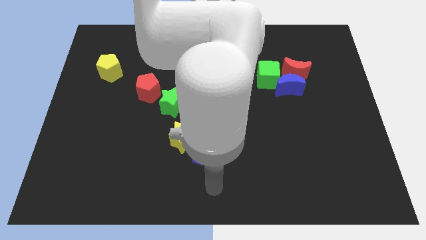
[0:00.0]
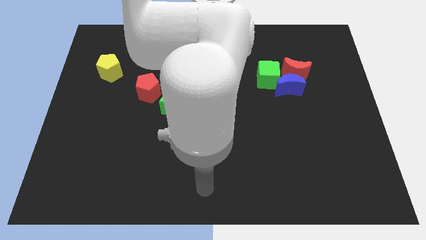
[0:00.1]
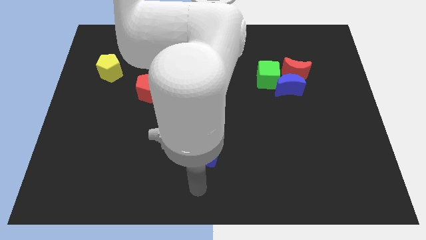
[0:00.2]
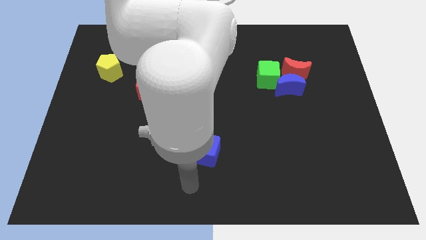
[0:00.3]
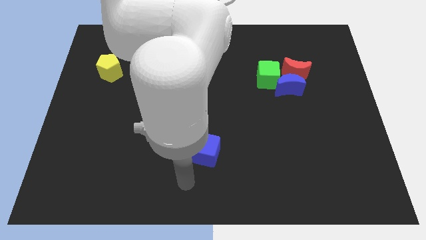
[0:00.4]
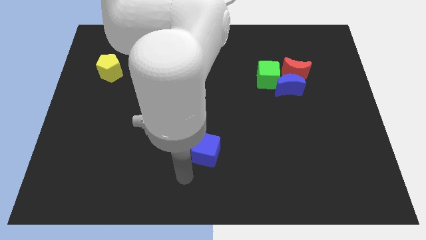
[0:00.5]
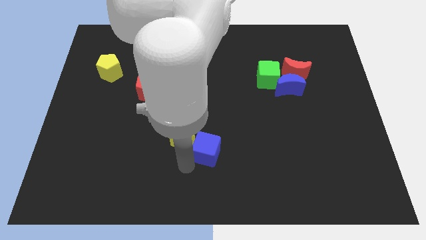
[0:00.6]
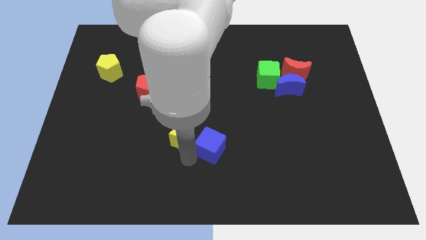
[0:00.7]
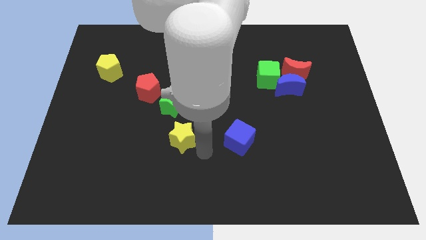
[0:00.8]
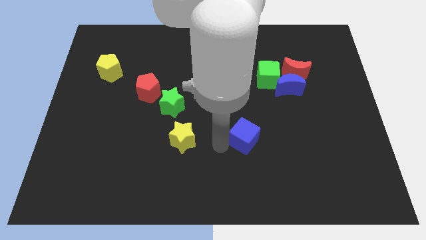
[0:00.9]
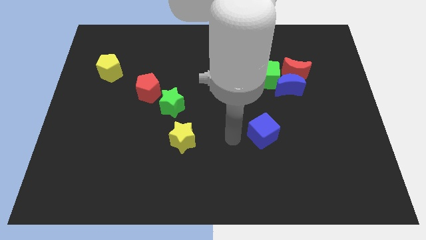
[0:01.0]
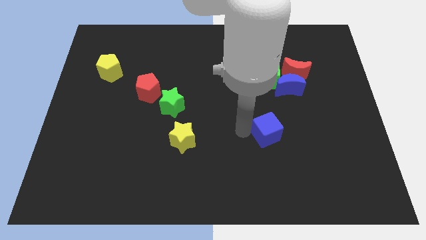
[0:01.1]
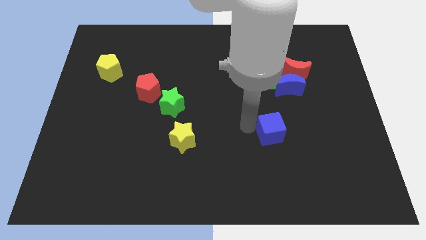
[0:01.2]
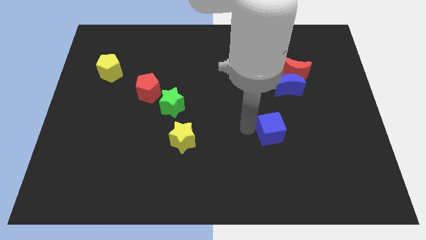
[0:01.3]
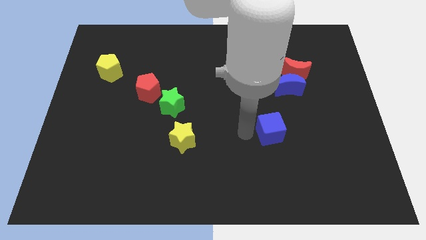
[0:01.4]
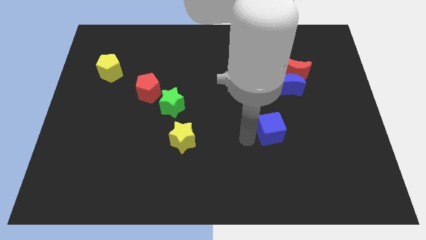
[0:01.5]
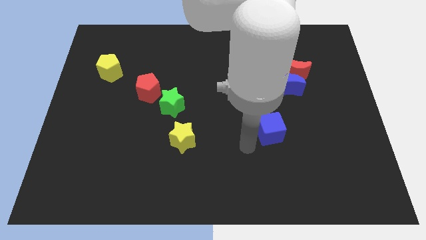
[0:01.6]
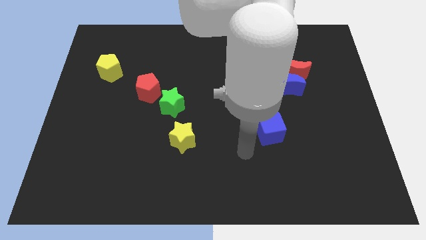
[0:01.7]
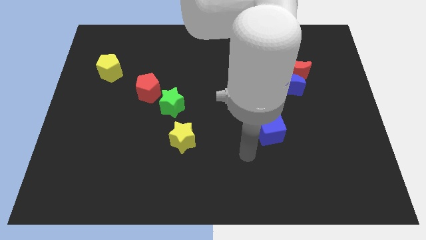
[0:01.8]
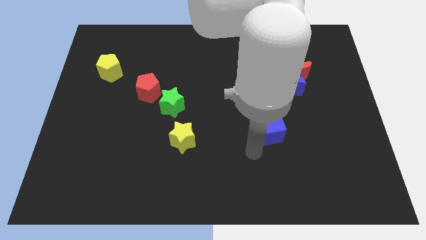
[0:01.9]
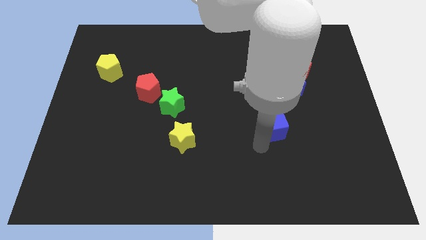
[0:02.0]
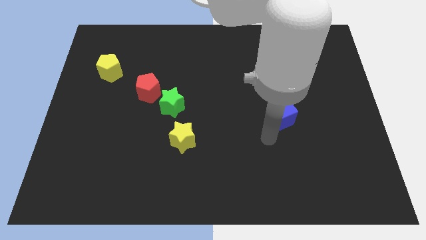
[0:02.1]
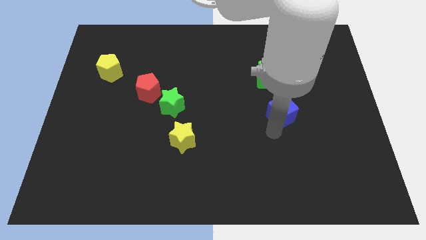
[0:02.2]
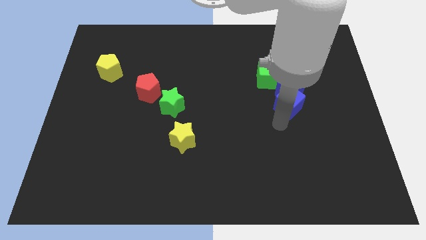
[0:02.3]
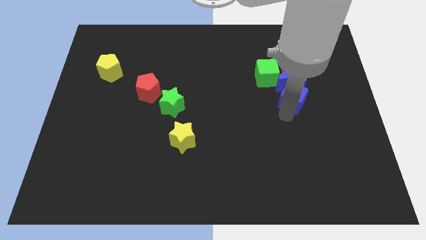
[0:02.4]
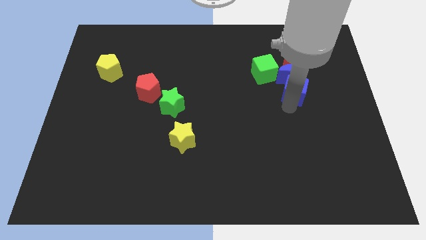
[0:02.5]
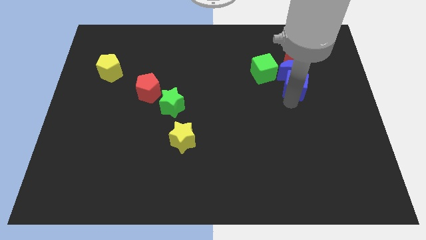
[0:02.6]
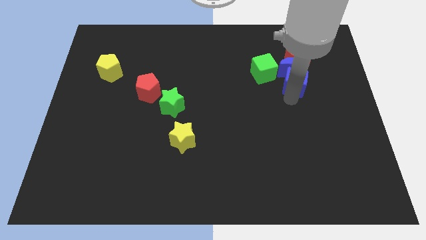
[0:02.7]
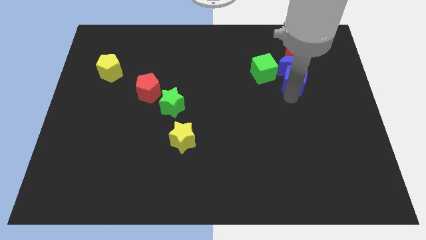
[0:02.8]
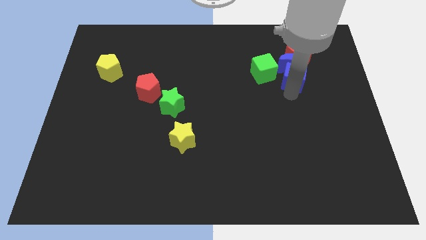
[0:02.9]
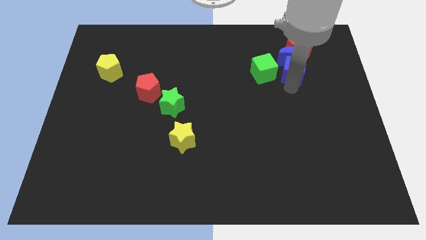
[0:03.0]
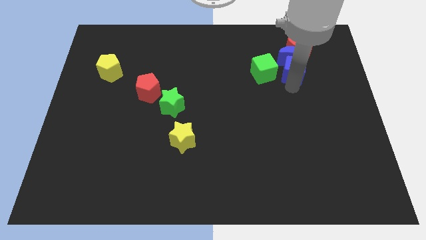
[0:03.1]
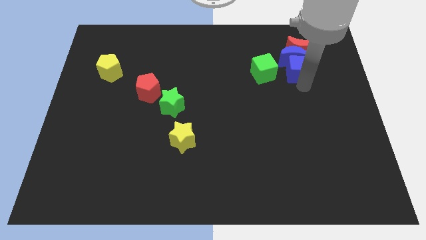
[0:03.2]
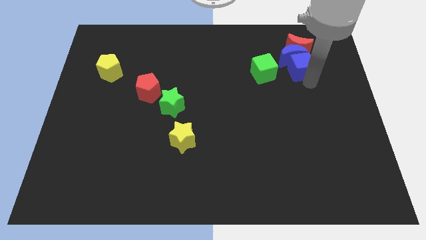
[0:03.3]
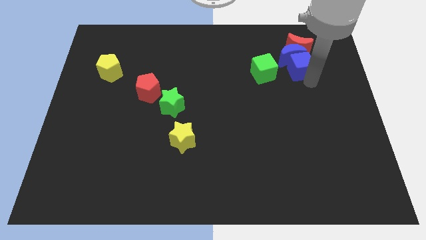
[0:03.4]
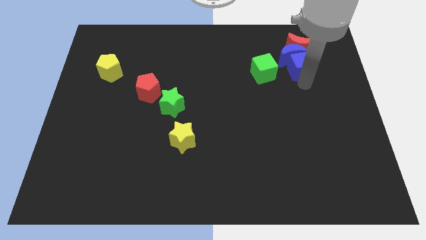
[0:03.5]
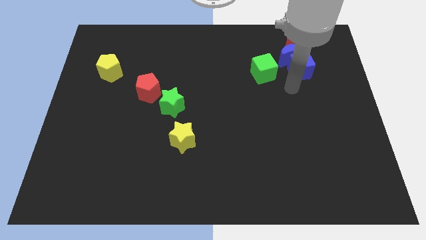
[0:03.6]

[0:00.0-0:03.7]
push blue cube into blue crescent

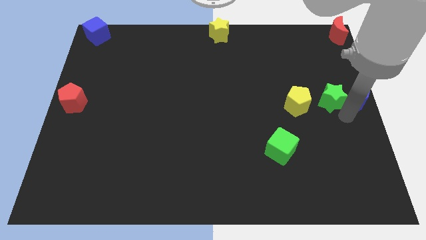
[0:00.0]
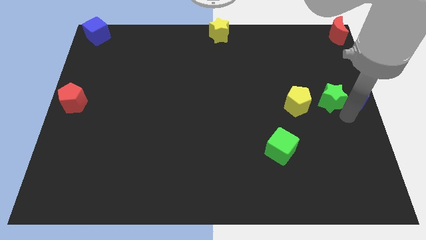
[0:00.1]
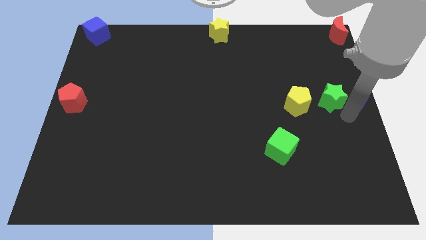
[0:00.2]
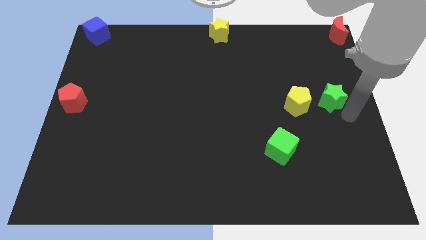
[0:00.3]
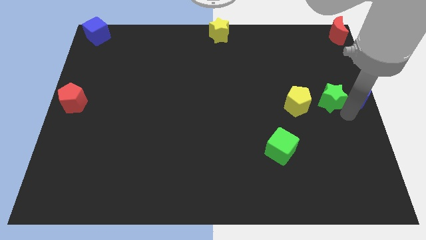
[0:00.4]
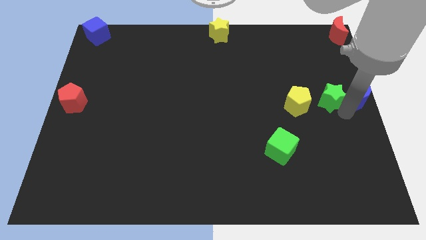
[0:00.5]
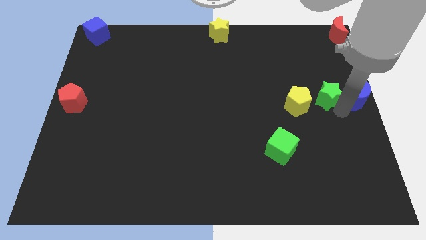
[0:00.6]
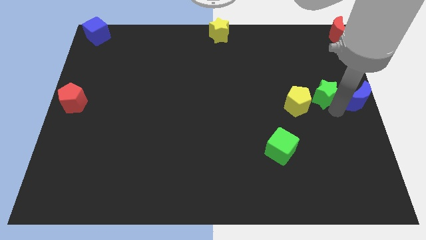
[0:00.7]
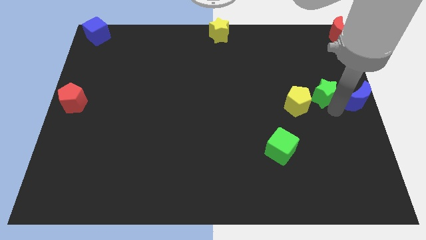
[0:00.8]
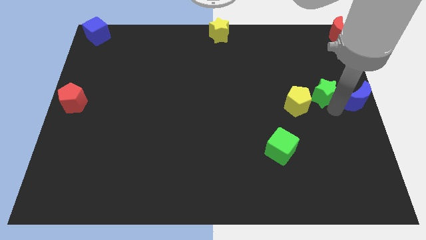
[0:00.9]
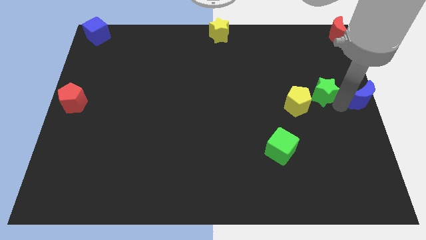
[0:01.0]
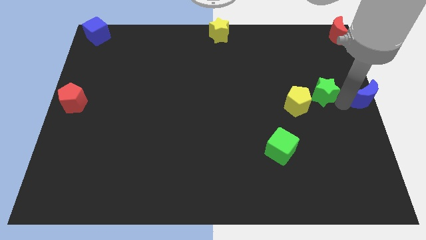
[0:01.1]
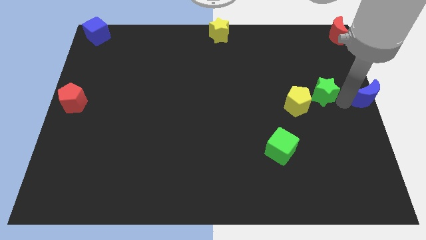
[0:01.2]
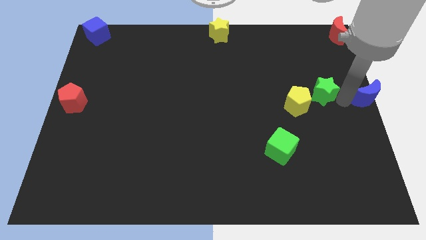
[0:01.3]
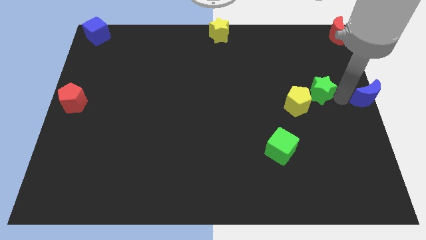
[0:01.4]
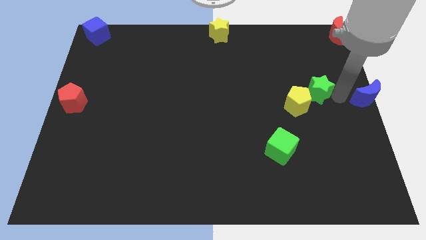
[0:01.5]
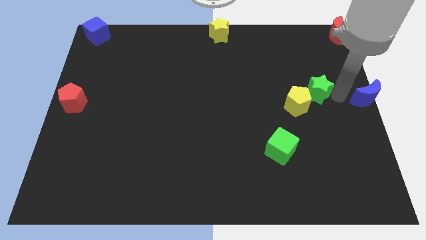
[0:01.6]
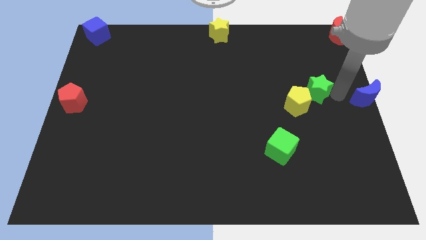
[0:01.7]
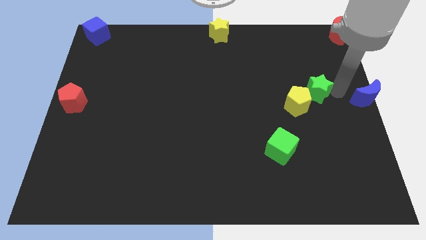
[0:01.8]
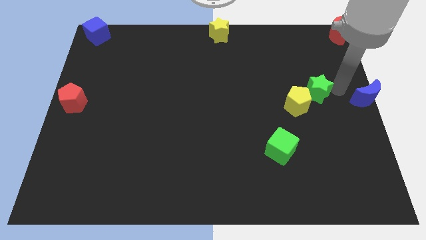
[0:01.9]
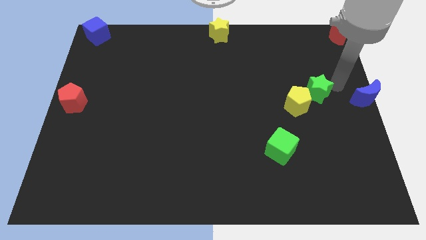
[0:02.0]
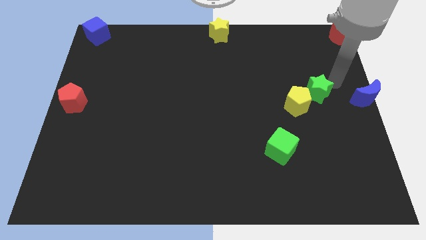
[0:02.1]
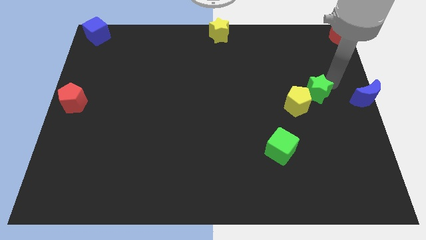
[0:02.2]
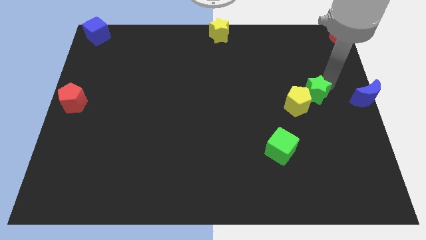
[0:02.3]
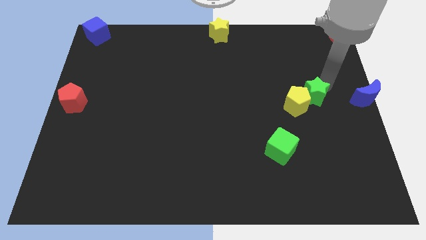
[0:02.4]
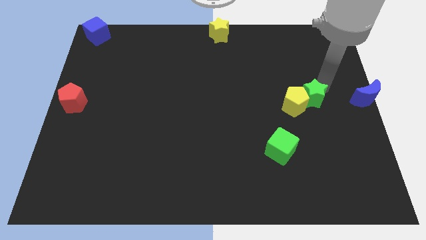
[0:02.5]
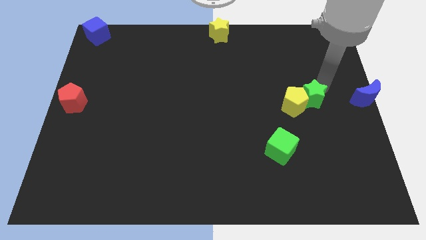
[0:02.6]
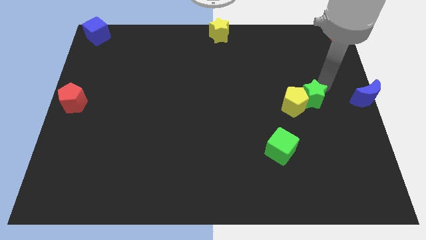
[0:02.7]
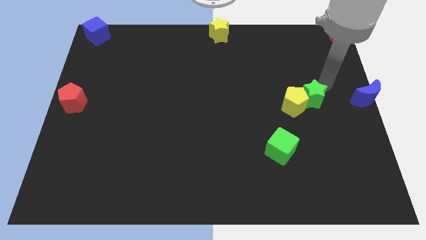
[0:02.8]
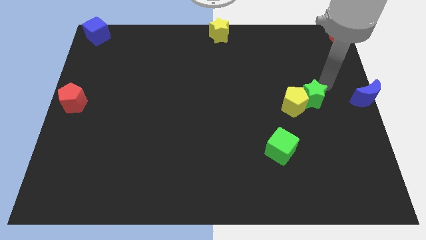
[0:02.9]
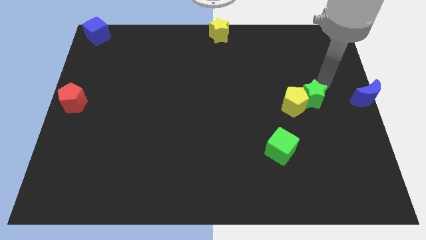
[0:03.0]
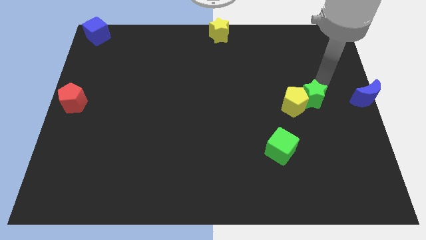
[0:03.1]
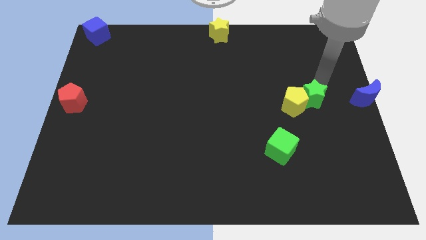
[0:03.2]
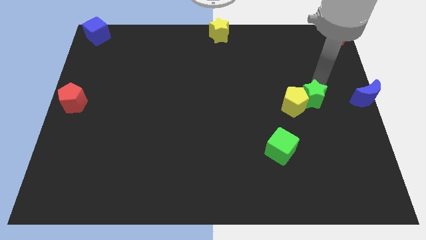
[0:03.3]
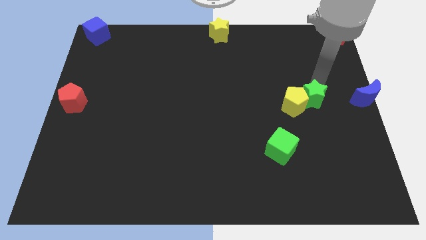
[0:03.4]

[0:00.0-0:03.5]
push the green star to the right top of the yellow pentagon

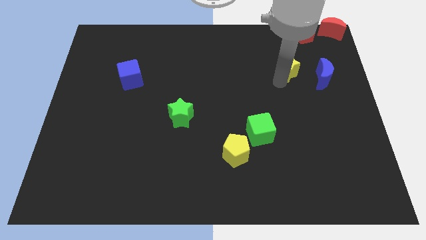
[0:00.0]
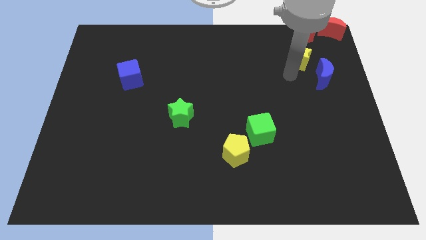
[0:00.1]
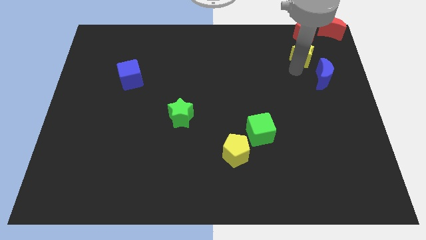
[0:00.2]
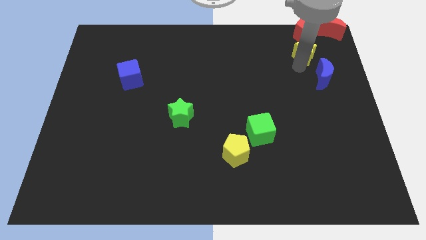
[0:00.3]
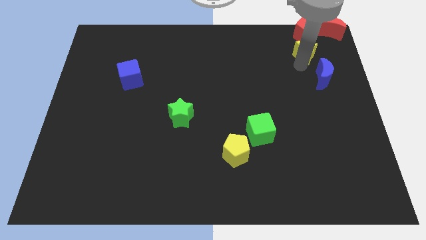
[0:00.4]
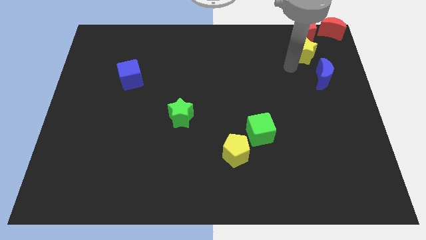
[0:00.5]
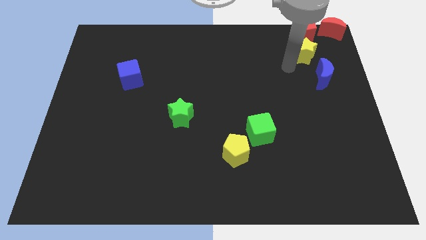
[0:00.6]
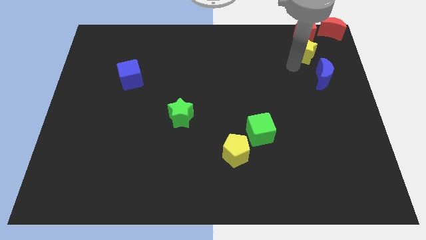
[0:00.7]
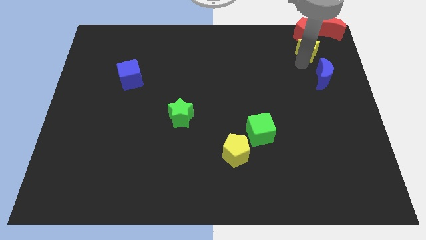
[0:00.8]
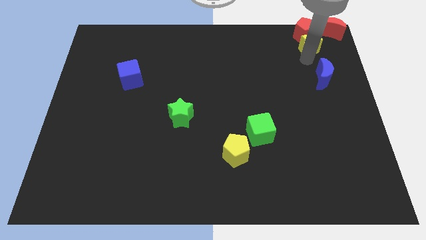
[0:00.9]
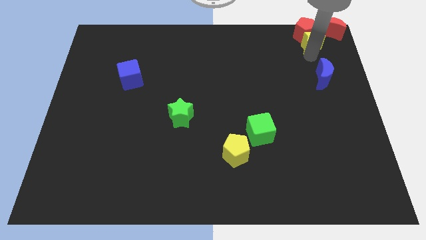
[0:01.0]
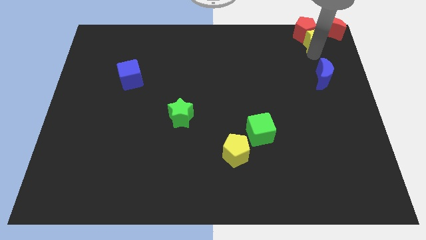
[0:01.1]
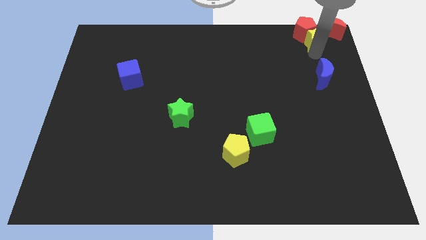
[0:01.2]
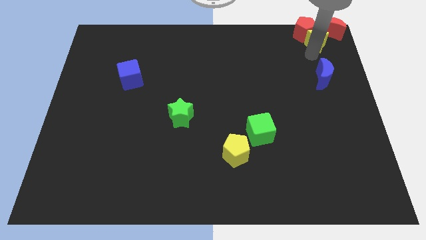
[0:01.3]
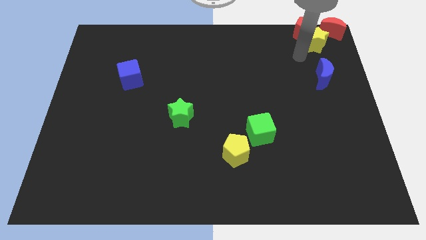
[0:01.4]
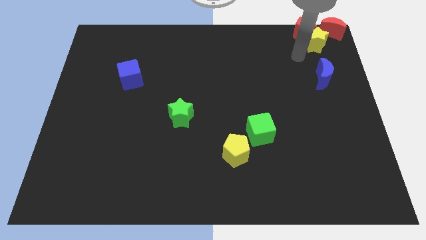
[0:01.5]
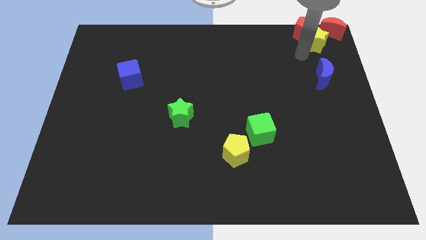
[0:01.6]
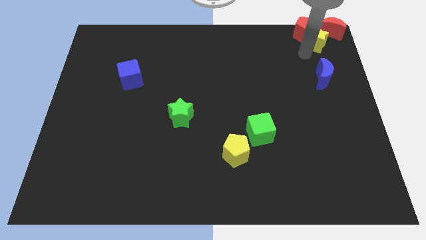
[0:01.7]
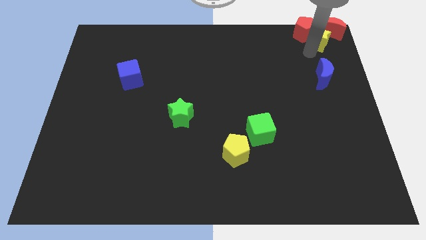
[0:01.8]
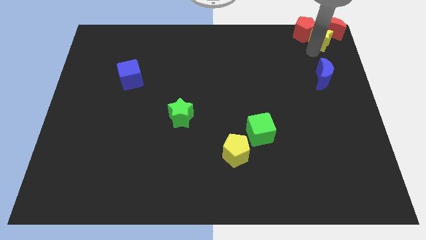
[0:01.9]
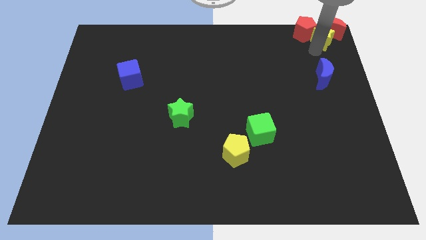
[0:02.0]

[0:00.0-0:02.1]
move yellow star to the top right
